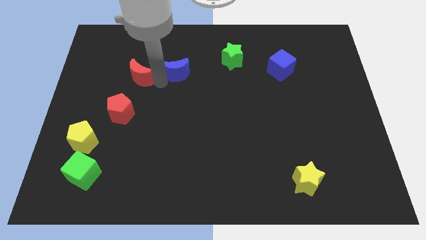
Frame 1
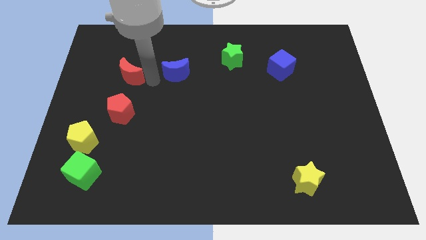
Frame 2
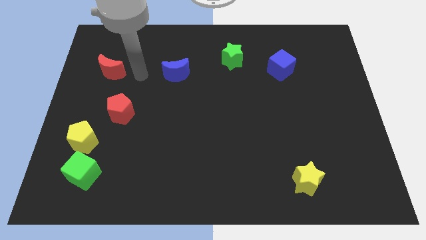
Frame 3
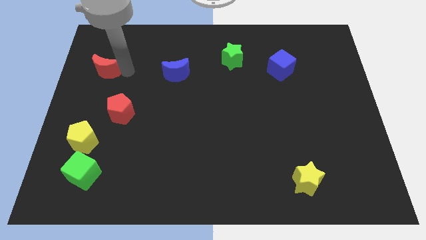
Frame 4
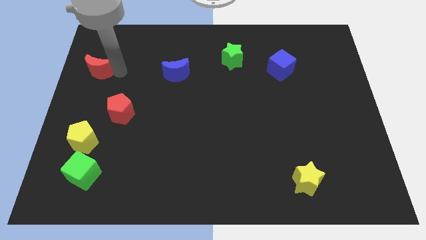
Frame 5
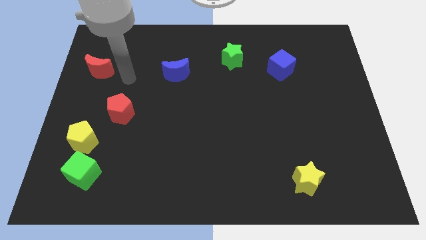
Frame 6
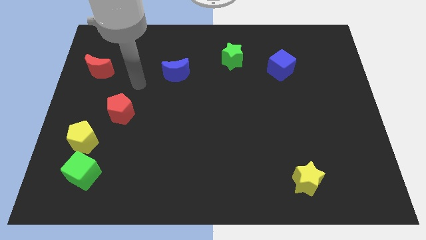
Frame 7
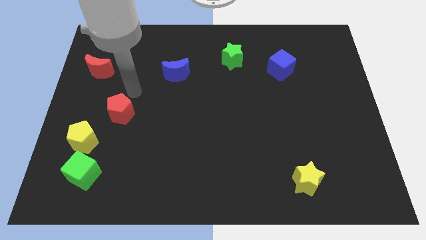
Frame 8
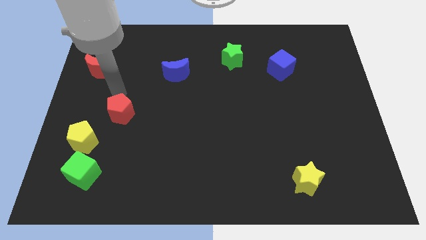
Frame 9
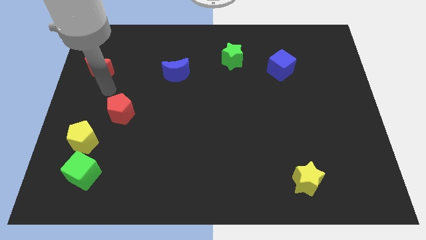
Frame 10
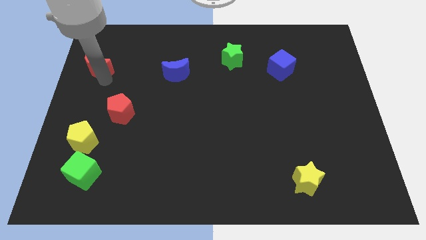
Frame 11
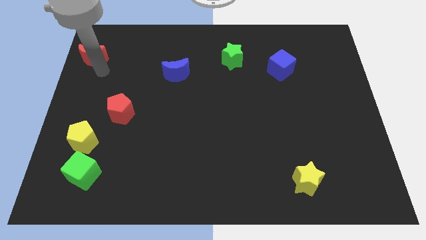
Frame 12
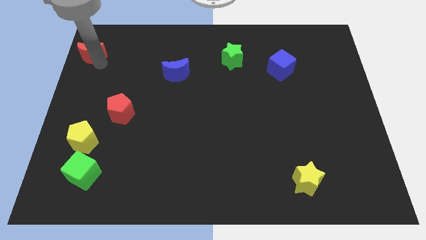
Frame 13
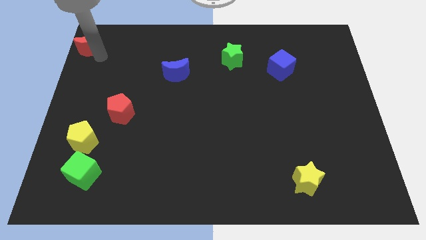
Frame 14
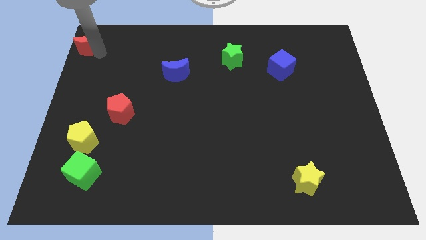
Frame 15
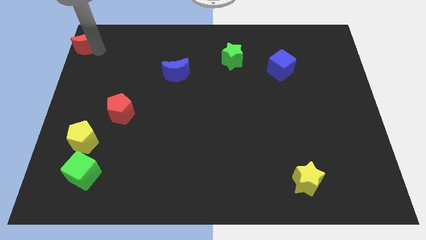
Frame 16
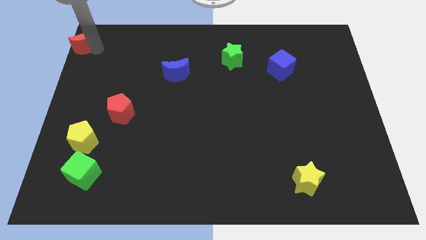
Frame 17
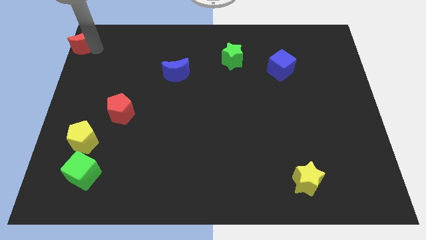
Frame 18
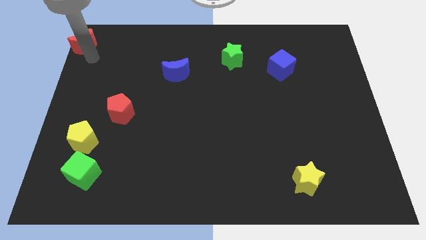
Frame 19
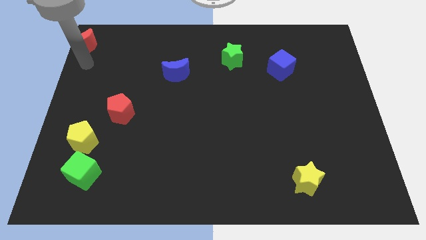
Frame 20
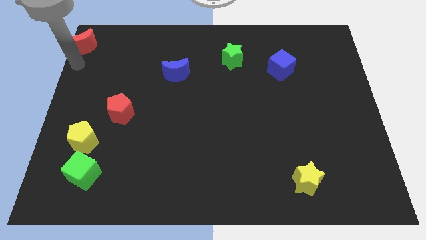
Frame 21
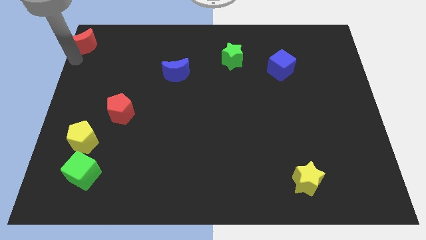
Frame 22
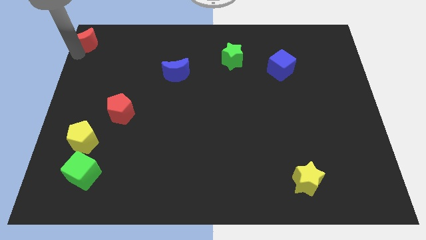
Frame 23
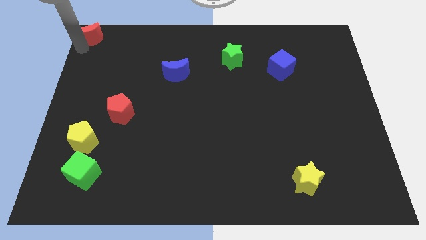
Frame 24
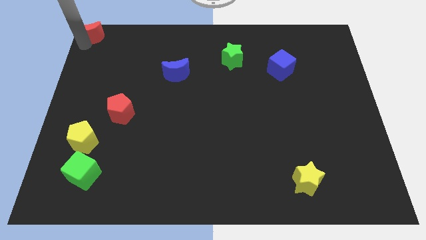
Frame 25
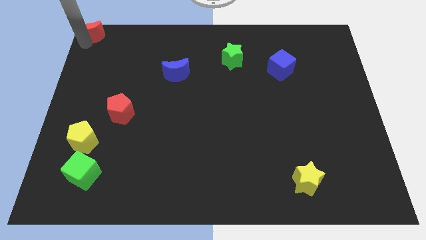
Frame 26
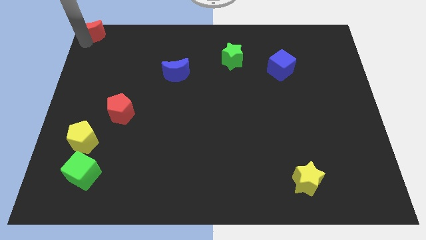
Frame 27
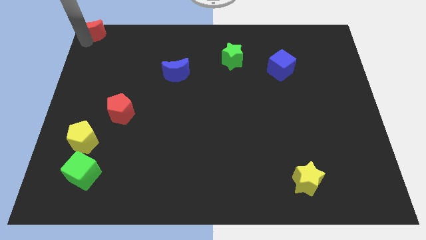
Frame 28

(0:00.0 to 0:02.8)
slide the red moon to the top left corner of the board

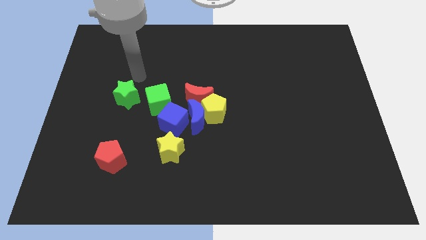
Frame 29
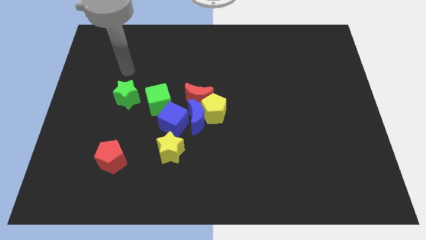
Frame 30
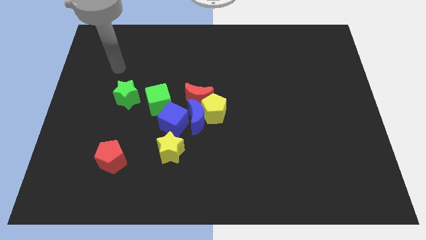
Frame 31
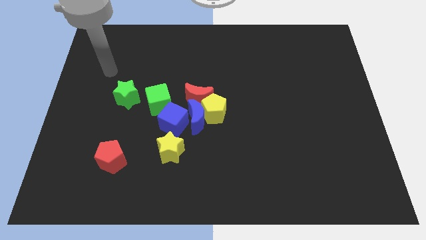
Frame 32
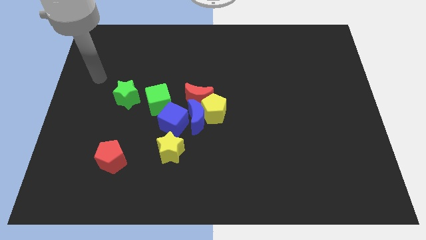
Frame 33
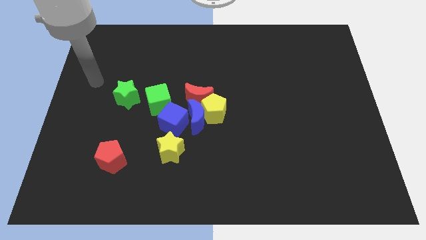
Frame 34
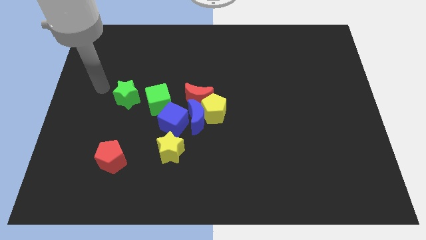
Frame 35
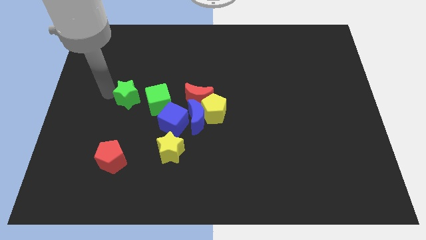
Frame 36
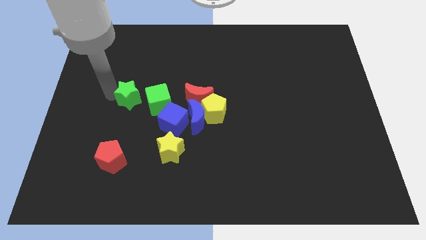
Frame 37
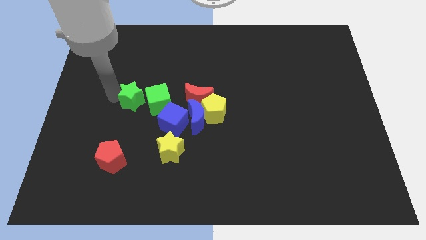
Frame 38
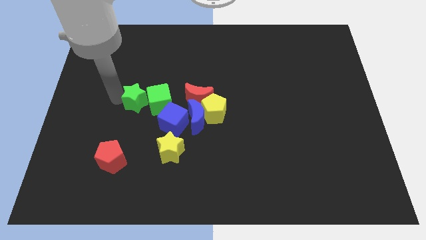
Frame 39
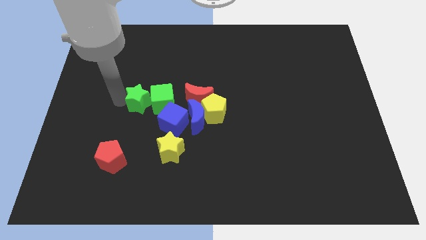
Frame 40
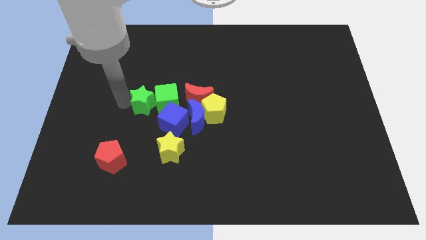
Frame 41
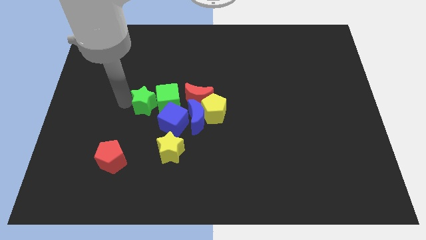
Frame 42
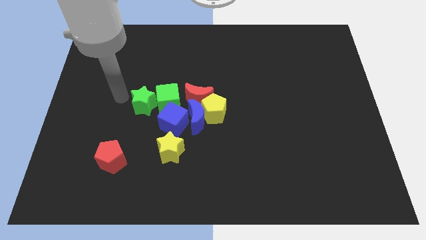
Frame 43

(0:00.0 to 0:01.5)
move the green star to the left side of the green cube

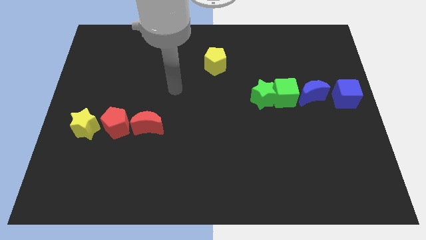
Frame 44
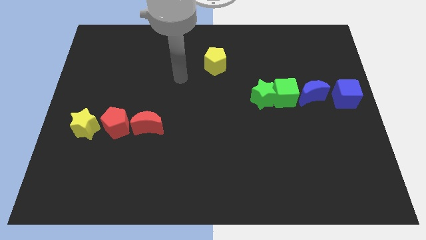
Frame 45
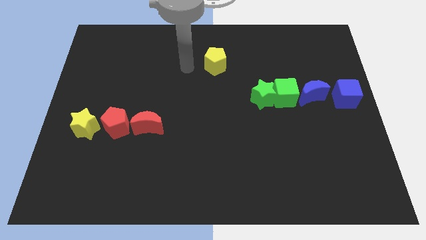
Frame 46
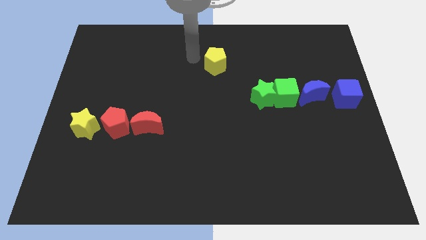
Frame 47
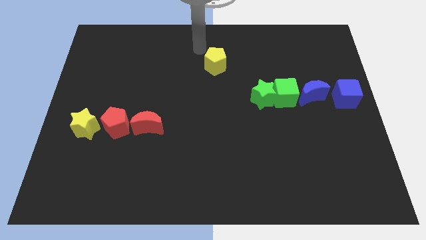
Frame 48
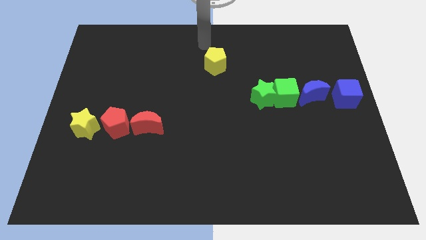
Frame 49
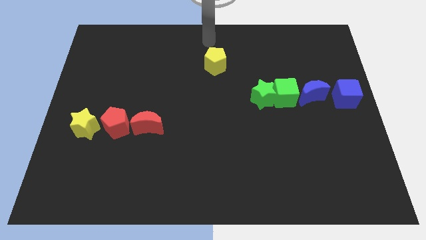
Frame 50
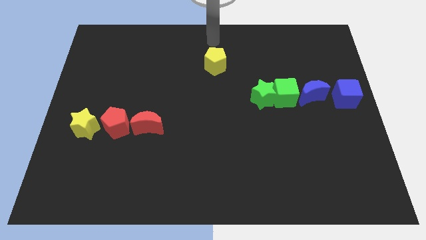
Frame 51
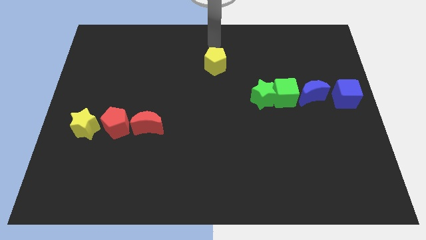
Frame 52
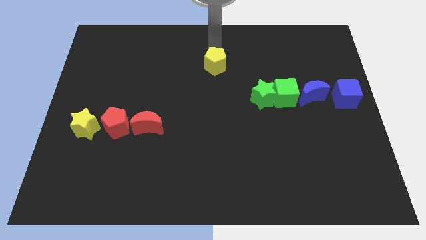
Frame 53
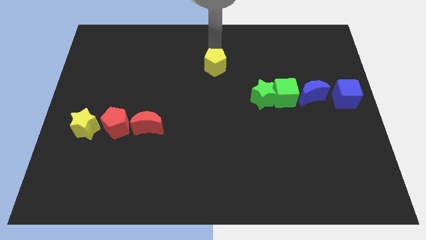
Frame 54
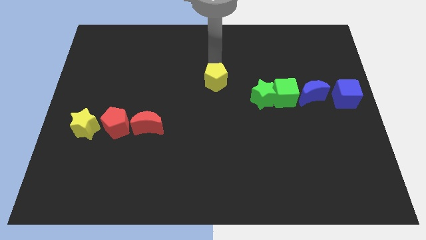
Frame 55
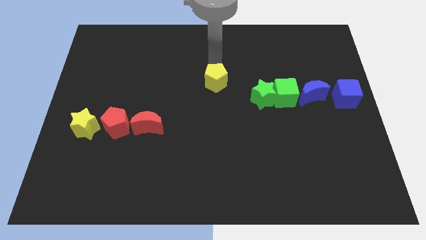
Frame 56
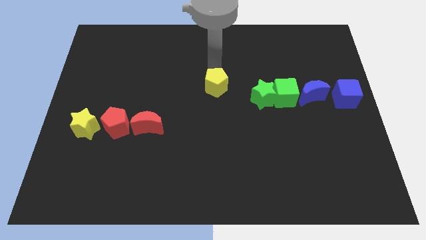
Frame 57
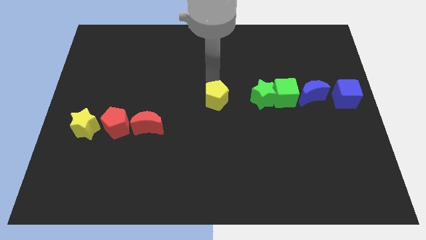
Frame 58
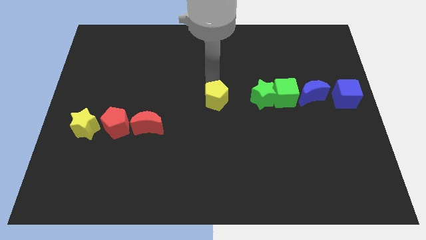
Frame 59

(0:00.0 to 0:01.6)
move the yellow pentagon to the center of the board

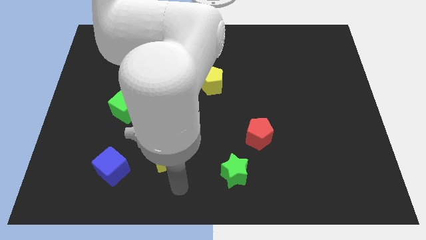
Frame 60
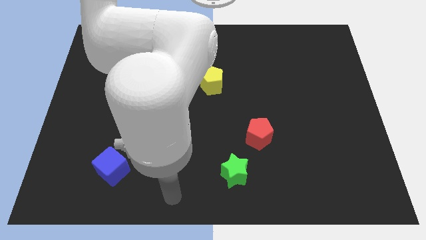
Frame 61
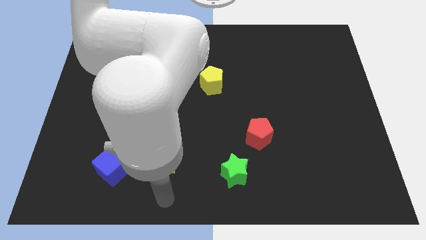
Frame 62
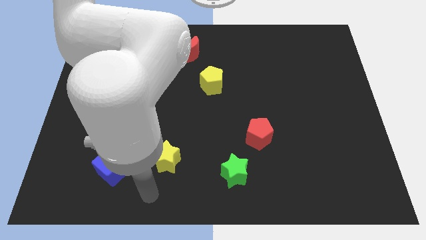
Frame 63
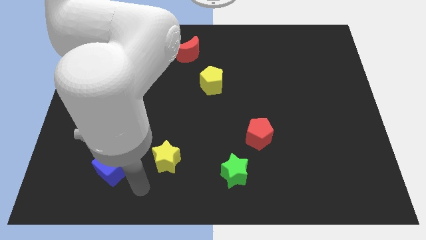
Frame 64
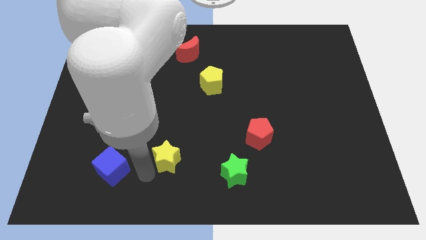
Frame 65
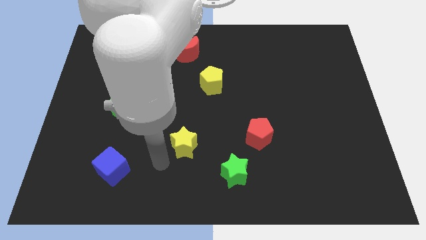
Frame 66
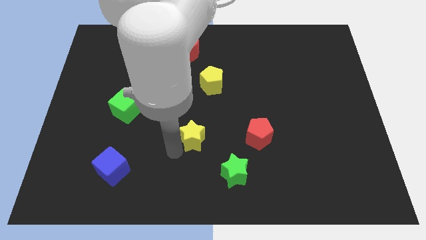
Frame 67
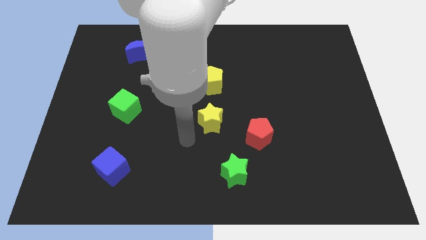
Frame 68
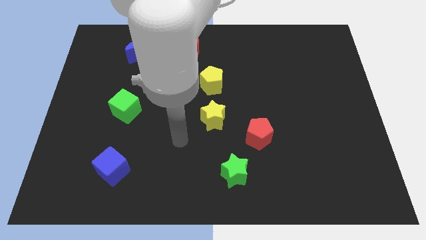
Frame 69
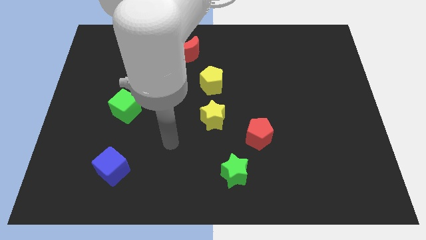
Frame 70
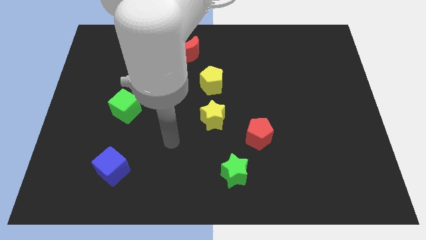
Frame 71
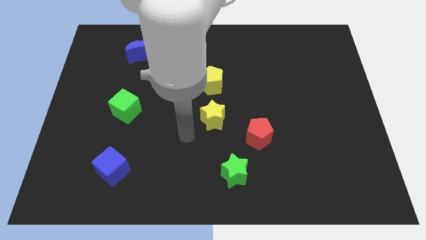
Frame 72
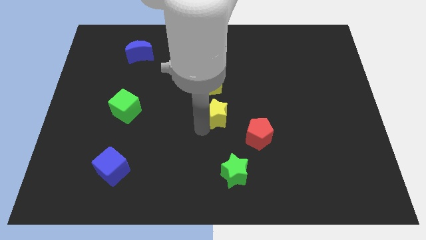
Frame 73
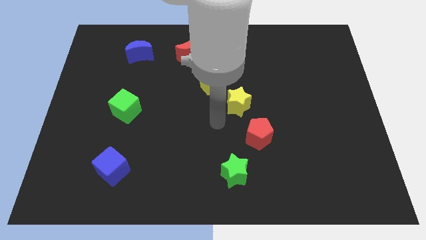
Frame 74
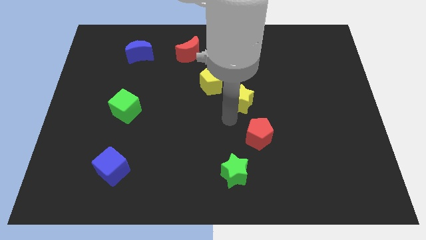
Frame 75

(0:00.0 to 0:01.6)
move the yellow star in between the yellow pentagon and red pentagon

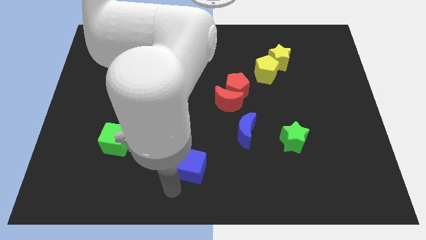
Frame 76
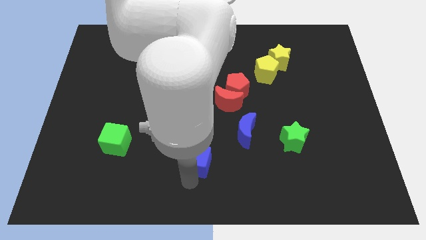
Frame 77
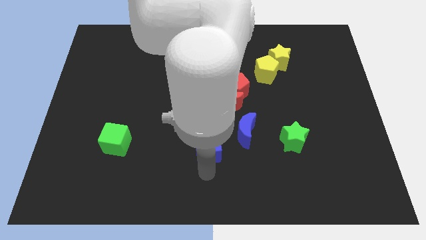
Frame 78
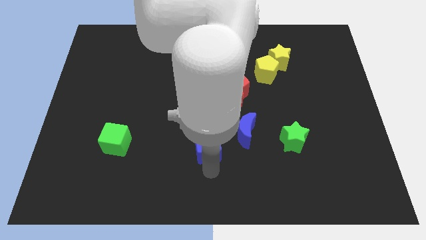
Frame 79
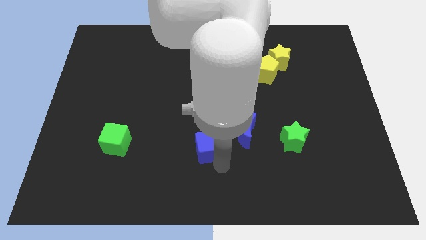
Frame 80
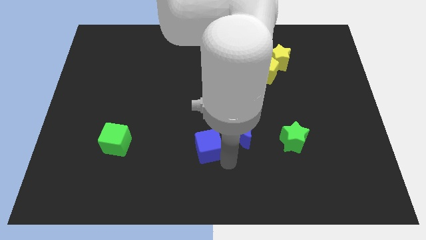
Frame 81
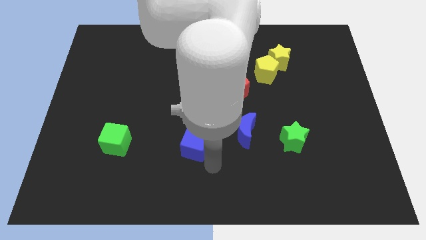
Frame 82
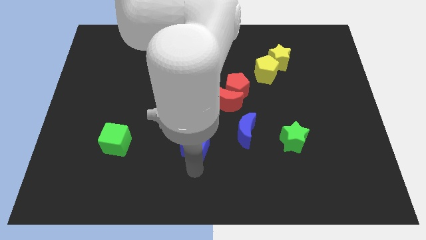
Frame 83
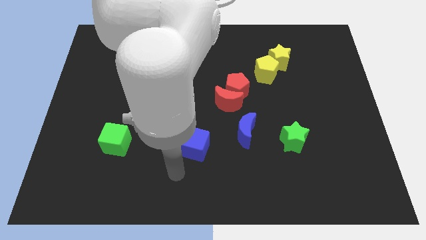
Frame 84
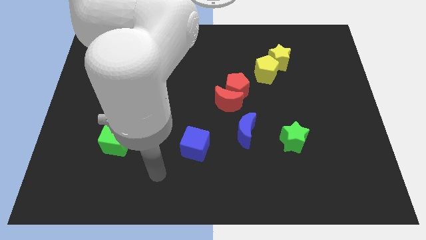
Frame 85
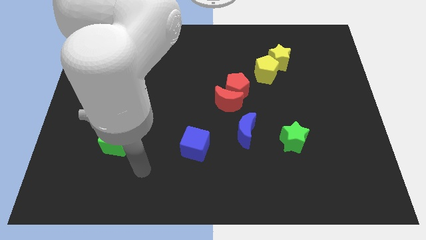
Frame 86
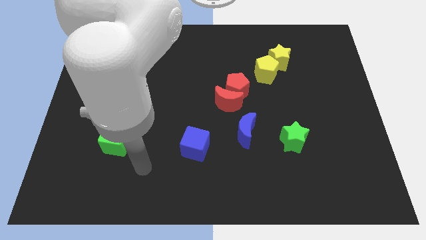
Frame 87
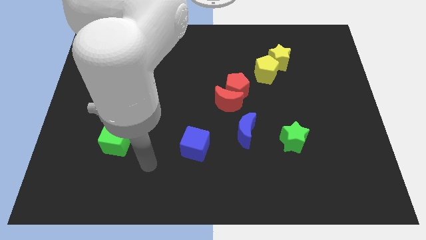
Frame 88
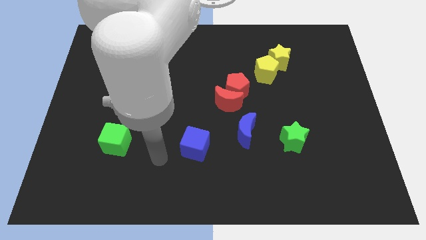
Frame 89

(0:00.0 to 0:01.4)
put the blue cube parallel right to the green cube
